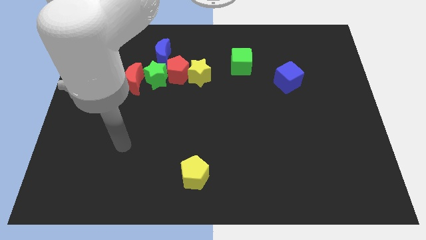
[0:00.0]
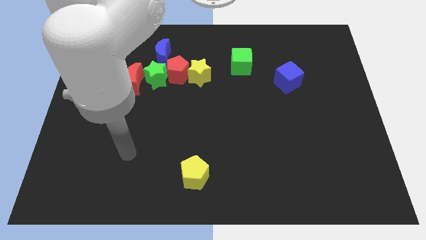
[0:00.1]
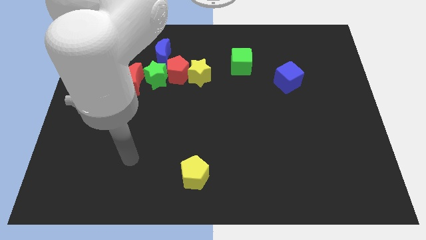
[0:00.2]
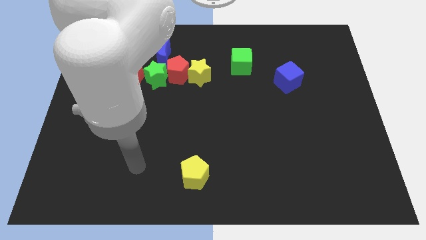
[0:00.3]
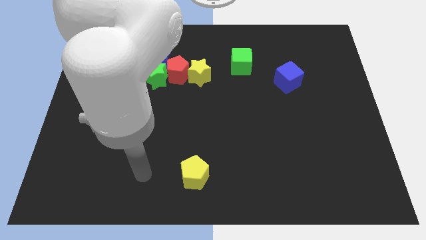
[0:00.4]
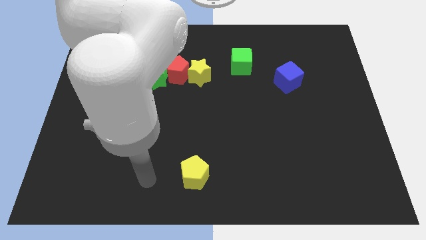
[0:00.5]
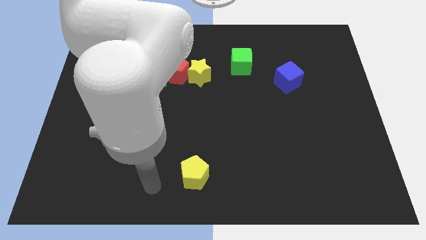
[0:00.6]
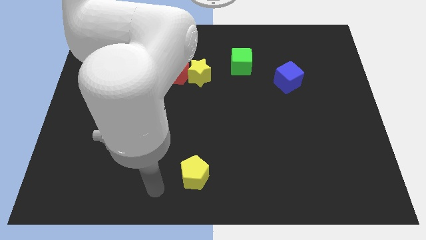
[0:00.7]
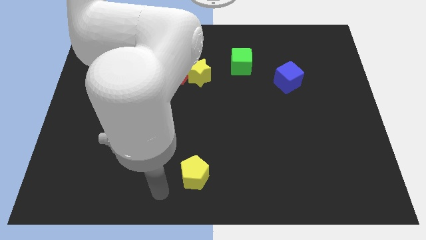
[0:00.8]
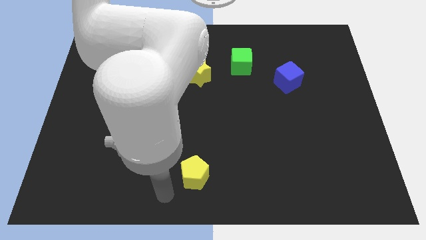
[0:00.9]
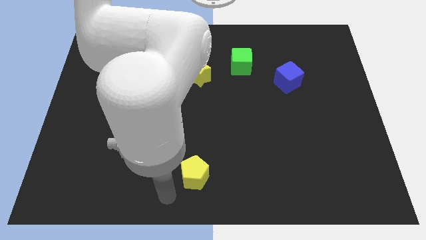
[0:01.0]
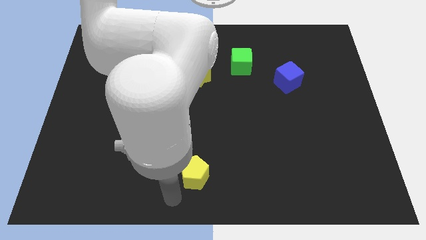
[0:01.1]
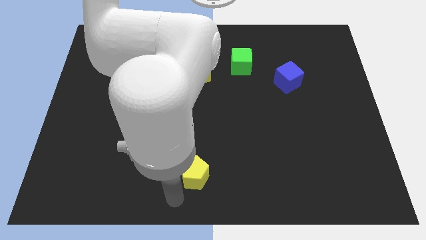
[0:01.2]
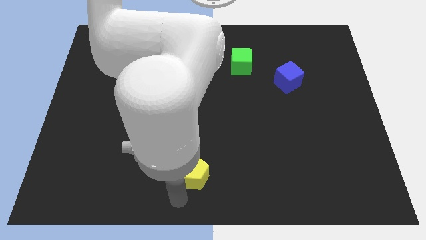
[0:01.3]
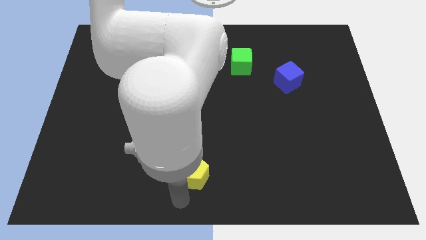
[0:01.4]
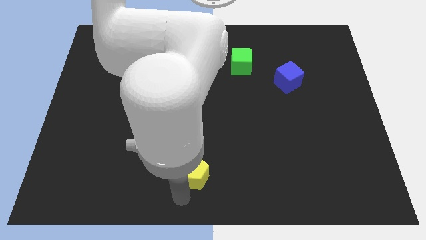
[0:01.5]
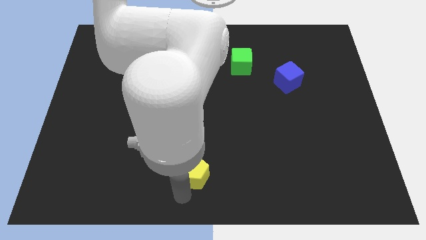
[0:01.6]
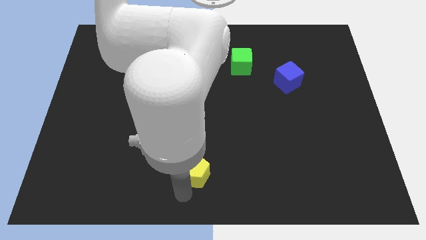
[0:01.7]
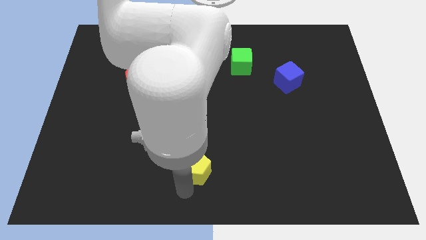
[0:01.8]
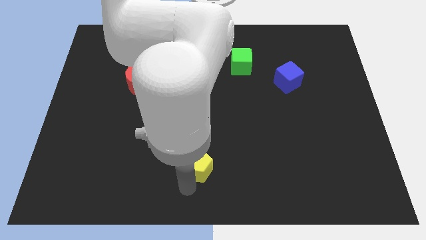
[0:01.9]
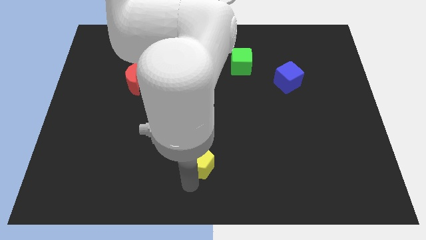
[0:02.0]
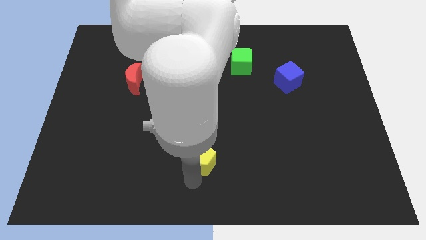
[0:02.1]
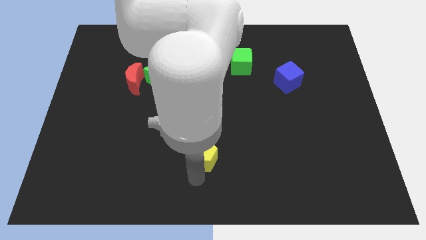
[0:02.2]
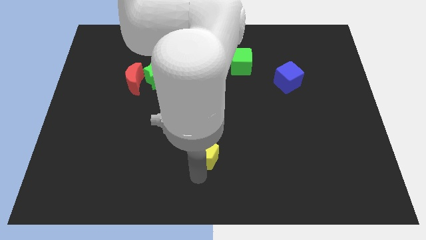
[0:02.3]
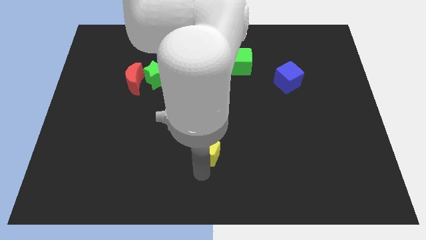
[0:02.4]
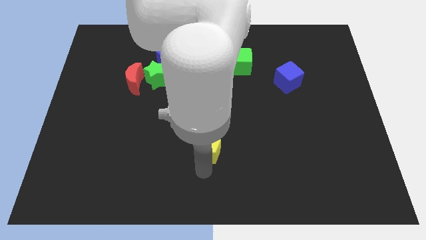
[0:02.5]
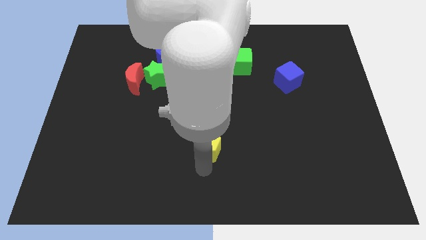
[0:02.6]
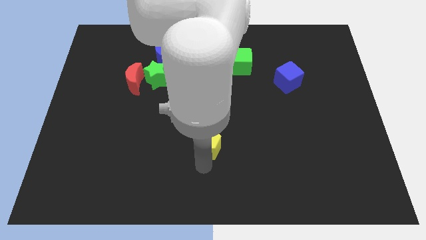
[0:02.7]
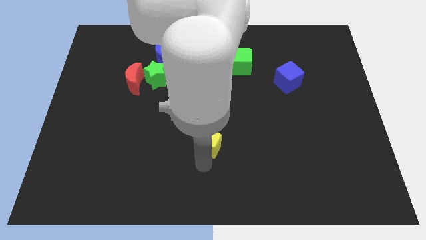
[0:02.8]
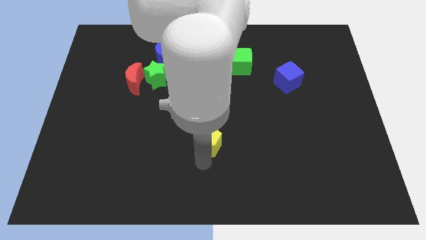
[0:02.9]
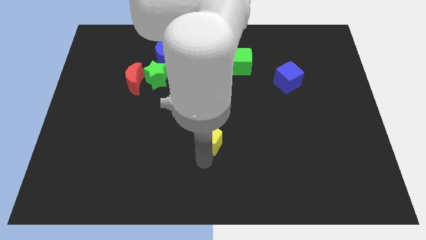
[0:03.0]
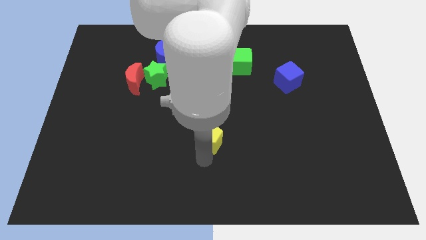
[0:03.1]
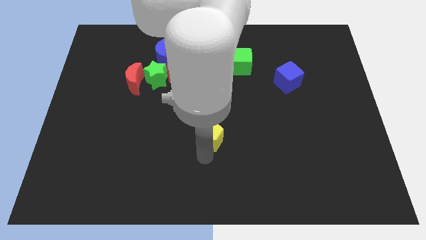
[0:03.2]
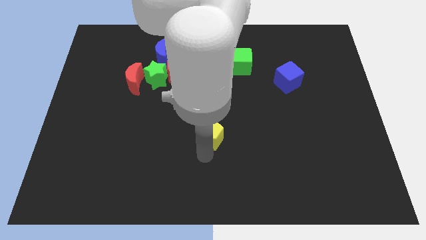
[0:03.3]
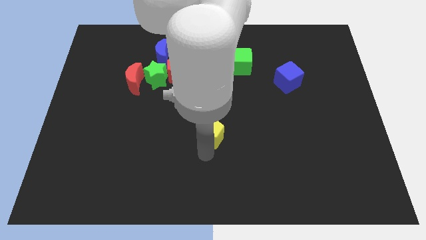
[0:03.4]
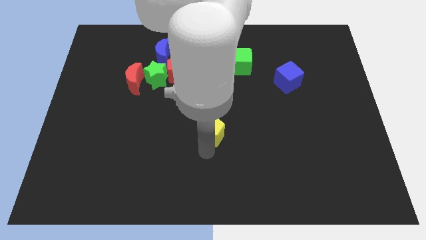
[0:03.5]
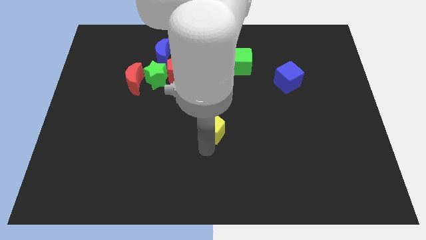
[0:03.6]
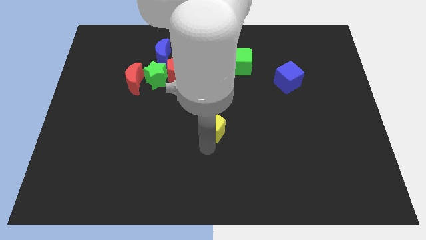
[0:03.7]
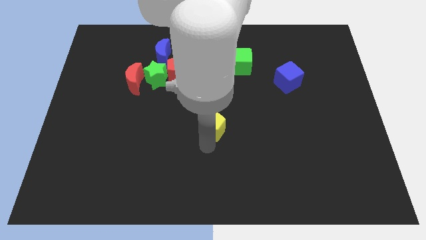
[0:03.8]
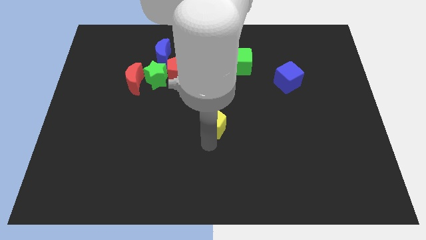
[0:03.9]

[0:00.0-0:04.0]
push the yellow pentagon towards the top side of the board

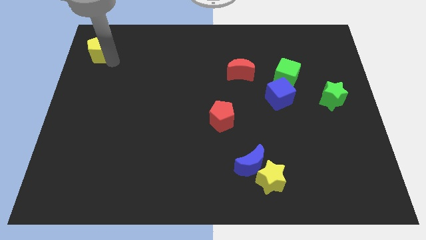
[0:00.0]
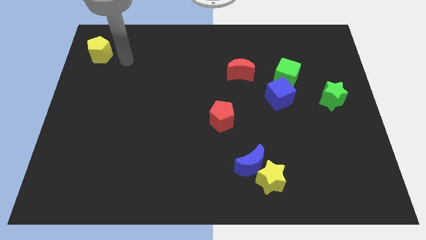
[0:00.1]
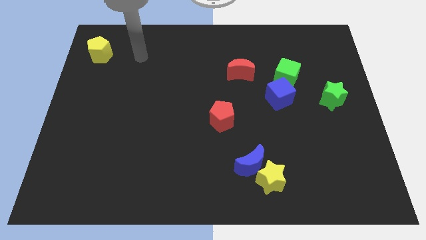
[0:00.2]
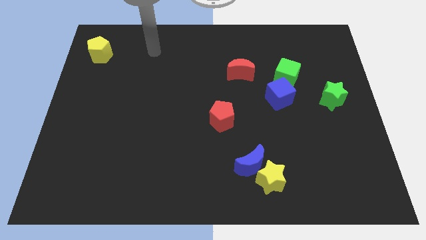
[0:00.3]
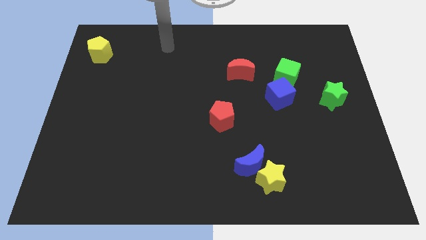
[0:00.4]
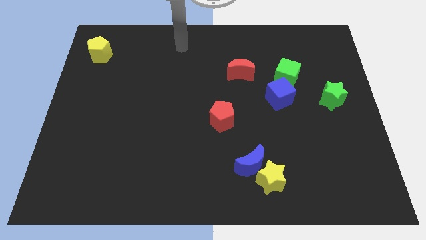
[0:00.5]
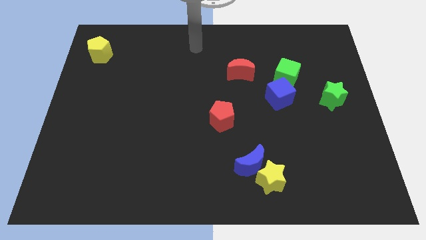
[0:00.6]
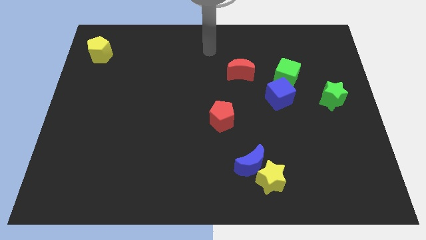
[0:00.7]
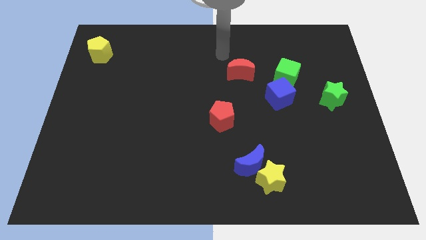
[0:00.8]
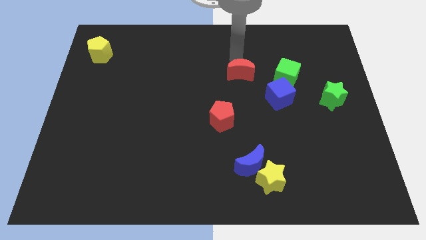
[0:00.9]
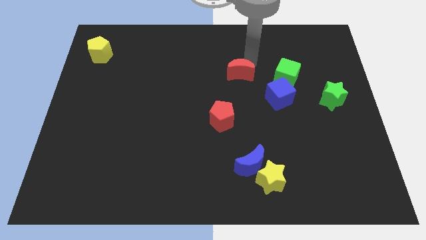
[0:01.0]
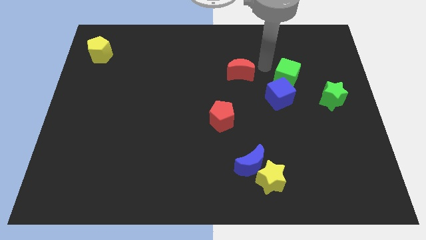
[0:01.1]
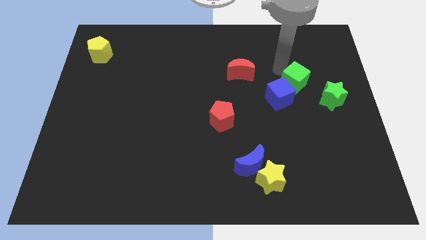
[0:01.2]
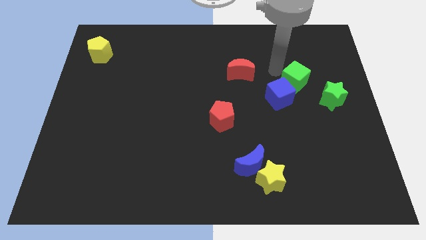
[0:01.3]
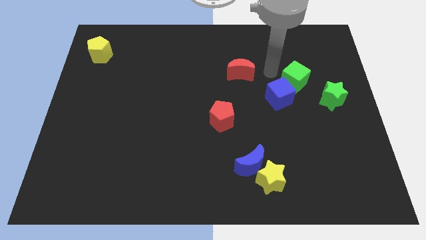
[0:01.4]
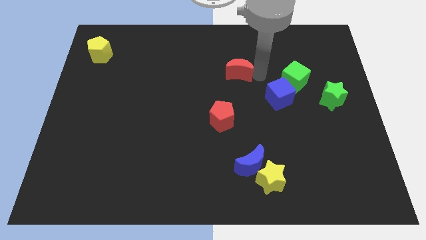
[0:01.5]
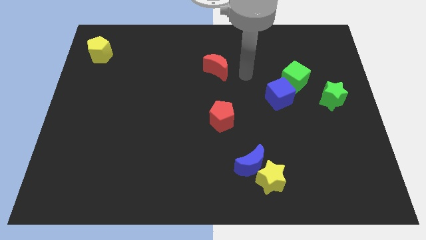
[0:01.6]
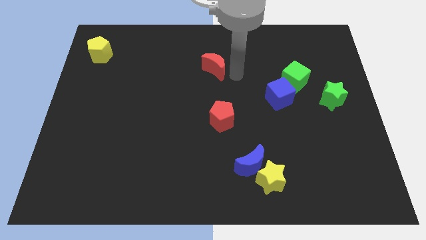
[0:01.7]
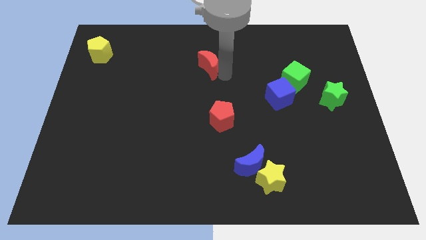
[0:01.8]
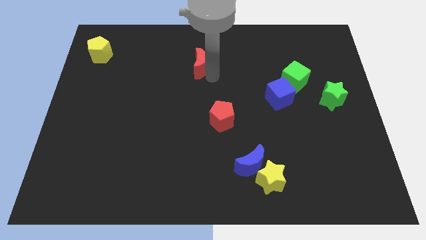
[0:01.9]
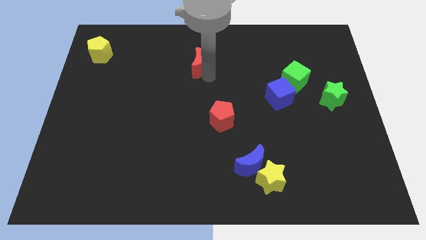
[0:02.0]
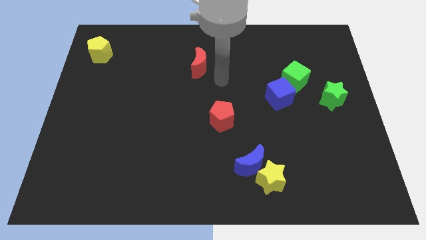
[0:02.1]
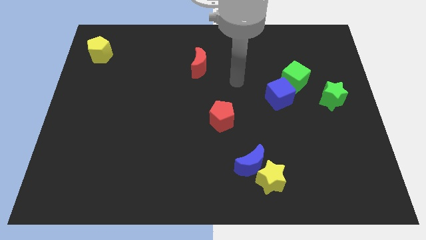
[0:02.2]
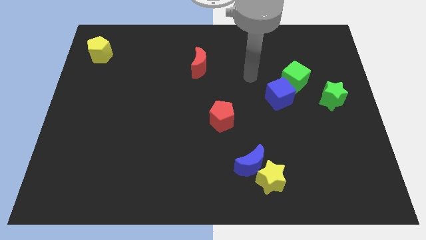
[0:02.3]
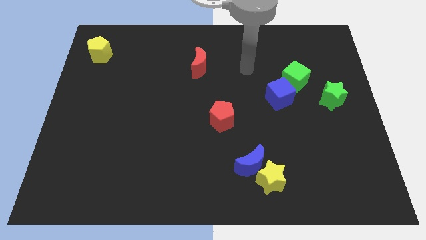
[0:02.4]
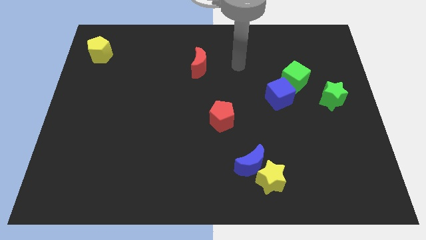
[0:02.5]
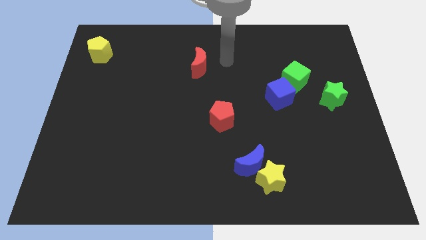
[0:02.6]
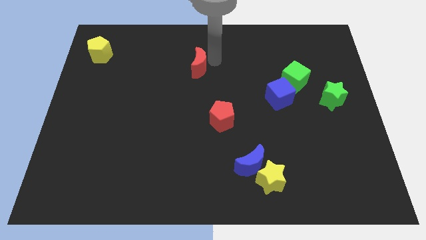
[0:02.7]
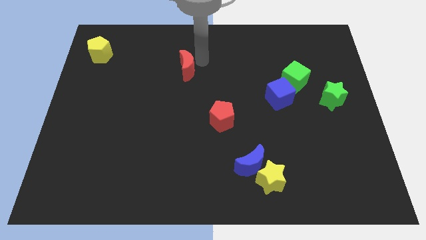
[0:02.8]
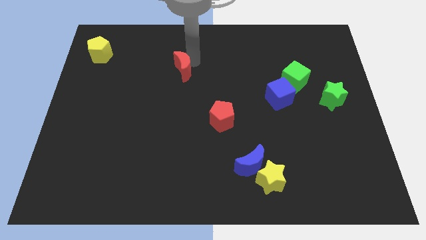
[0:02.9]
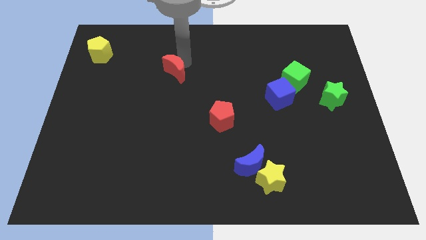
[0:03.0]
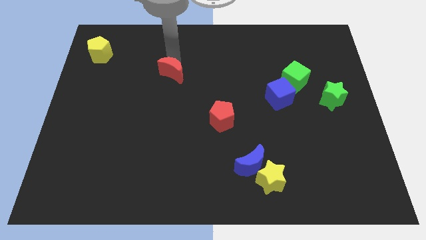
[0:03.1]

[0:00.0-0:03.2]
move the red moon diagonally top left to the red pentagon

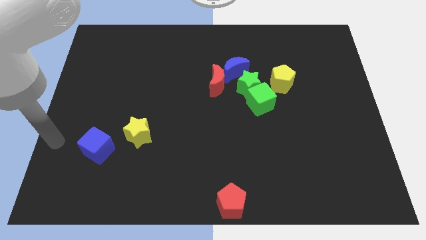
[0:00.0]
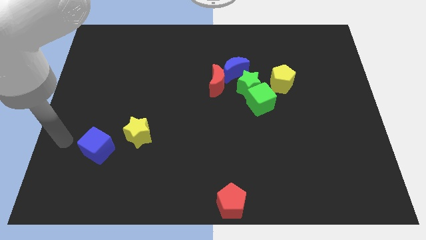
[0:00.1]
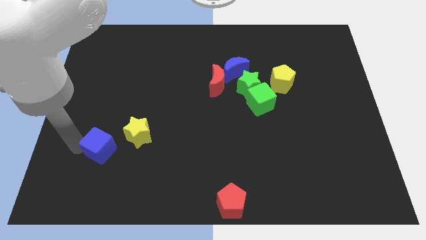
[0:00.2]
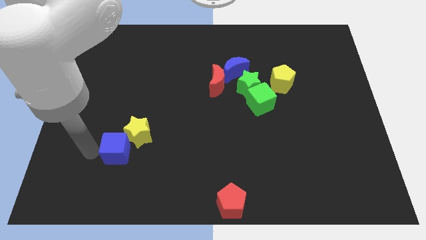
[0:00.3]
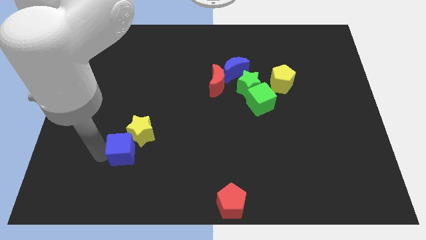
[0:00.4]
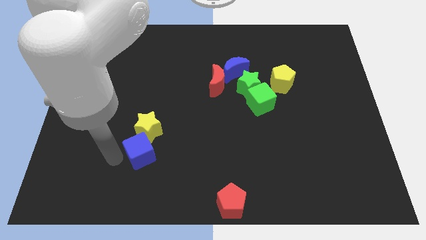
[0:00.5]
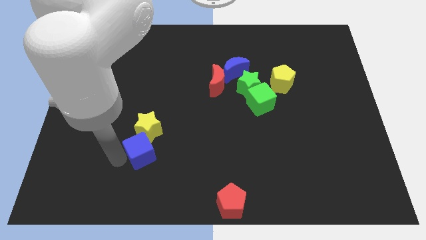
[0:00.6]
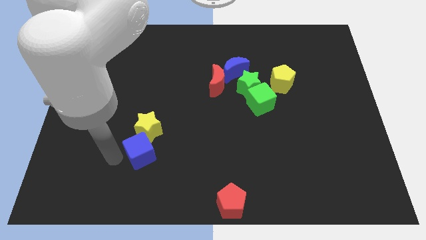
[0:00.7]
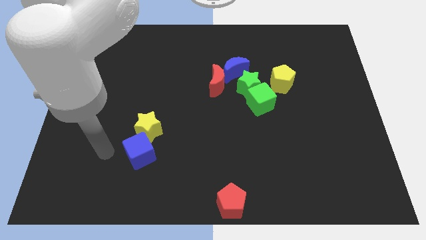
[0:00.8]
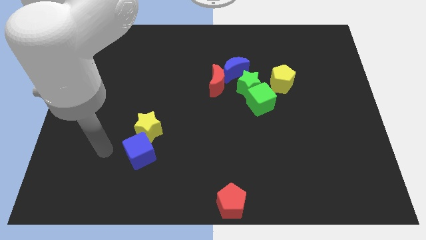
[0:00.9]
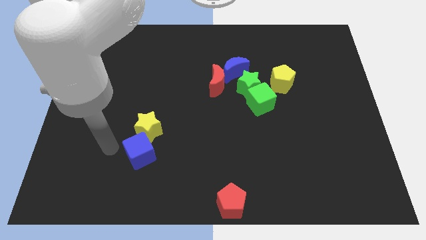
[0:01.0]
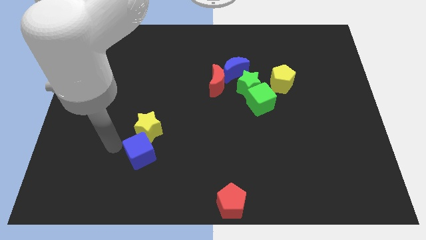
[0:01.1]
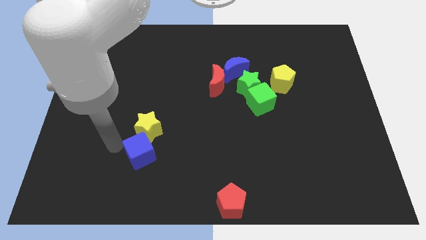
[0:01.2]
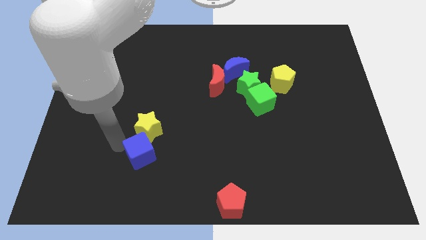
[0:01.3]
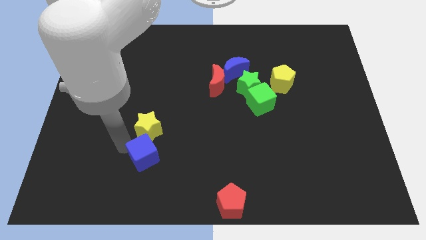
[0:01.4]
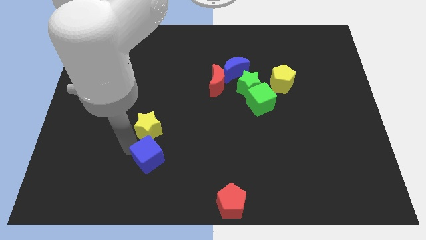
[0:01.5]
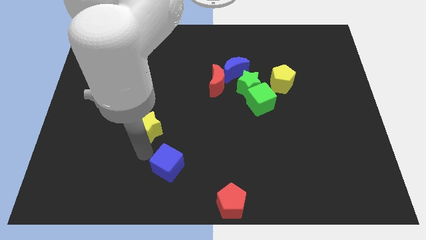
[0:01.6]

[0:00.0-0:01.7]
move the blue cube to the bottom of the yellow star

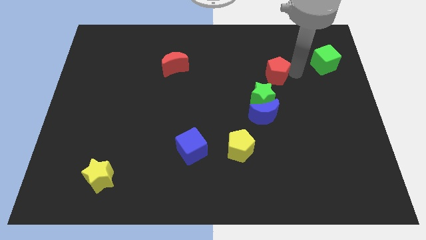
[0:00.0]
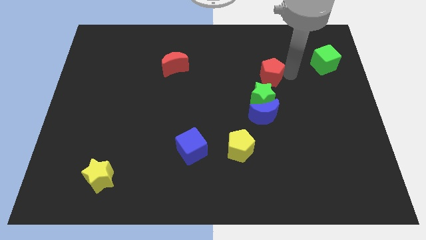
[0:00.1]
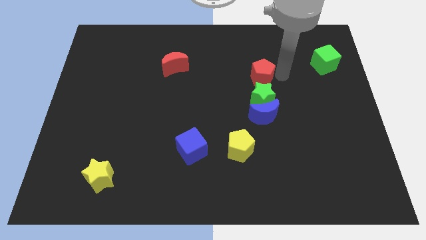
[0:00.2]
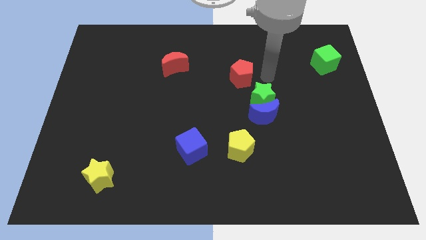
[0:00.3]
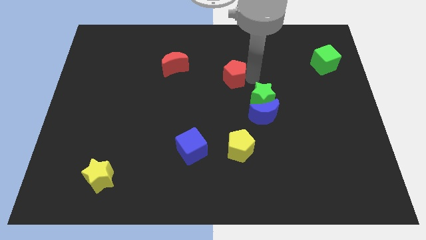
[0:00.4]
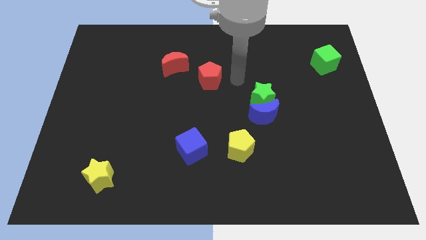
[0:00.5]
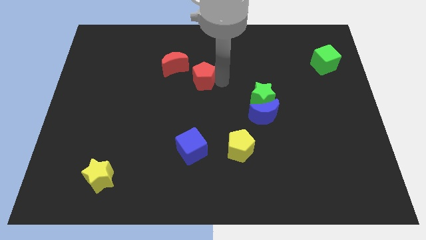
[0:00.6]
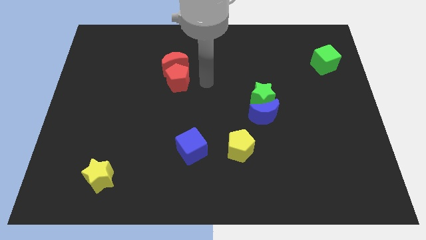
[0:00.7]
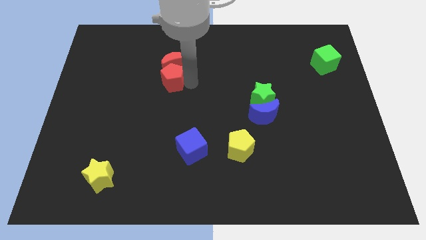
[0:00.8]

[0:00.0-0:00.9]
place the red pentagon above the blue cube
